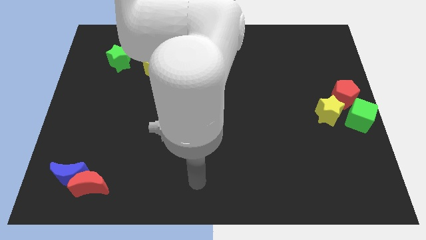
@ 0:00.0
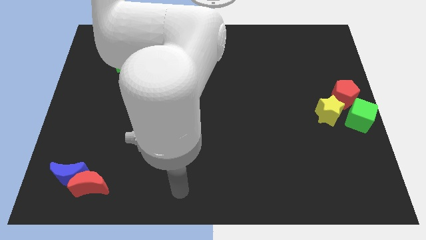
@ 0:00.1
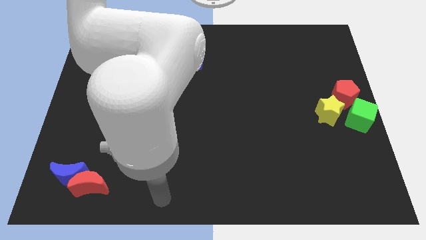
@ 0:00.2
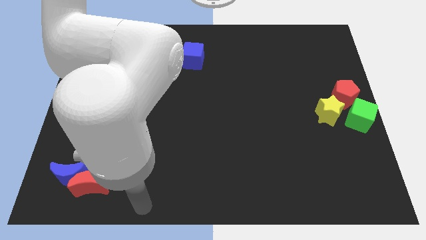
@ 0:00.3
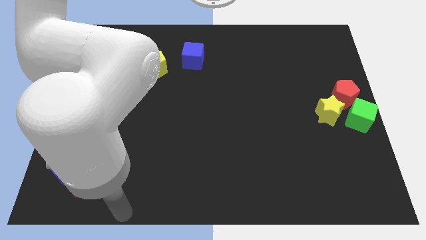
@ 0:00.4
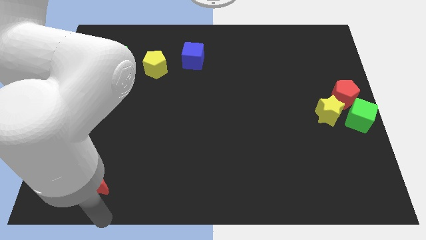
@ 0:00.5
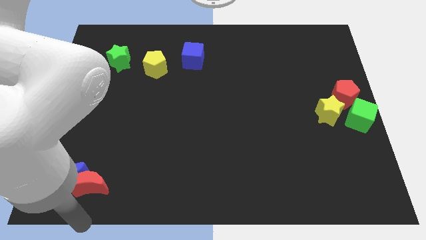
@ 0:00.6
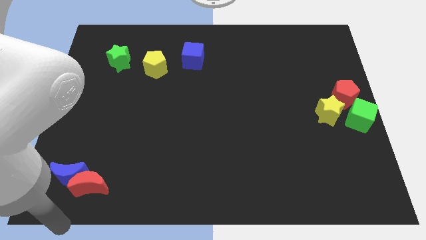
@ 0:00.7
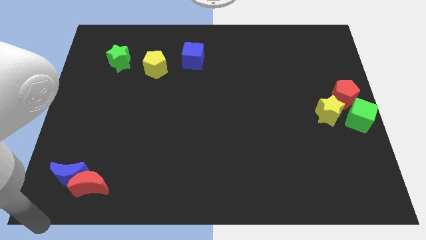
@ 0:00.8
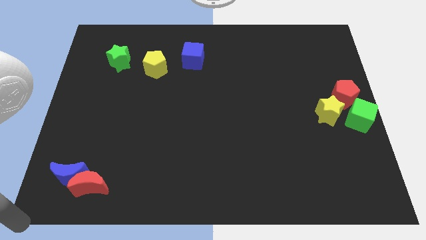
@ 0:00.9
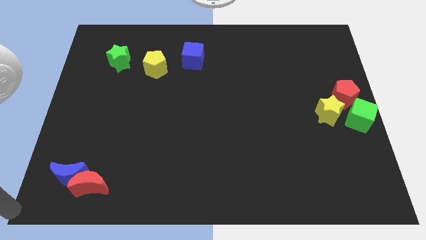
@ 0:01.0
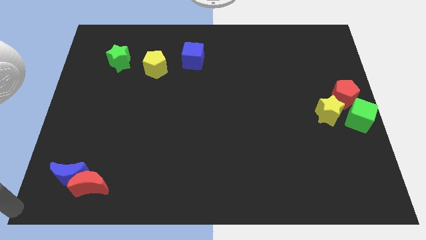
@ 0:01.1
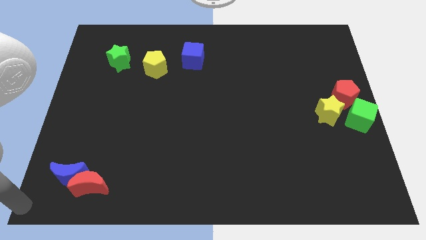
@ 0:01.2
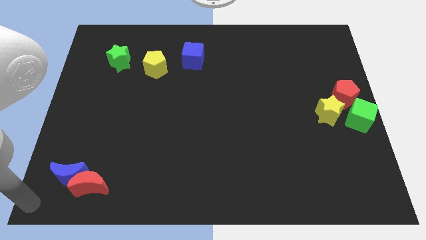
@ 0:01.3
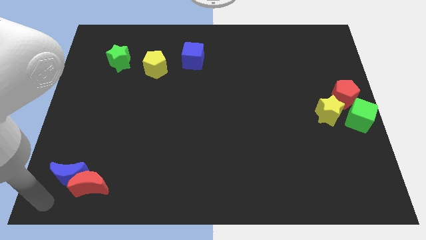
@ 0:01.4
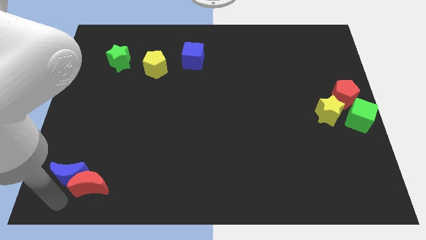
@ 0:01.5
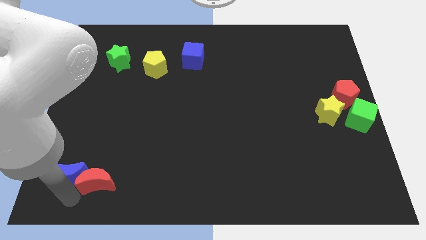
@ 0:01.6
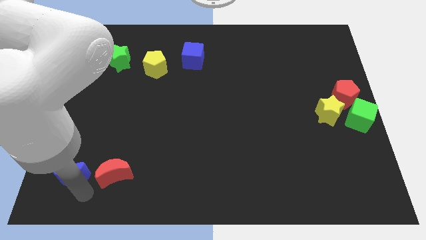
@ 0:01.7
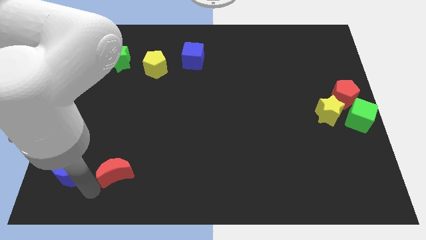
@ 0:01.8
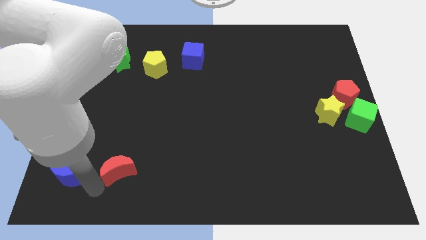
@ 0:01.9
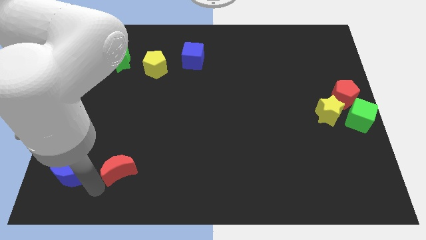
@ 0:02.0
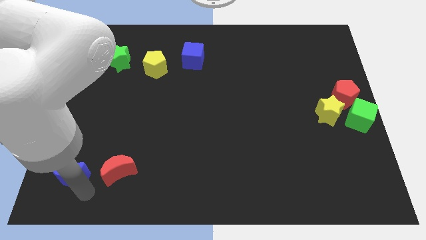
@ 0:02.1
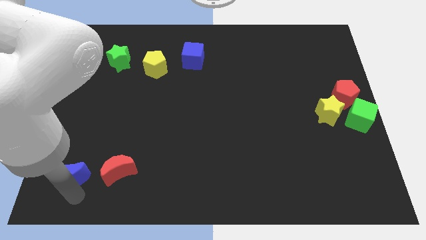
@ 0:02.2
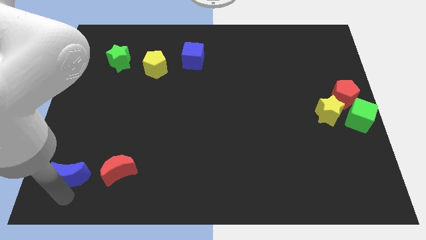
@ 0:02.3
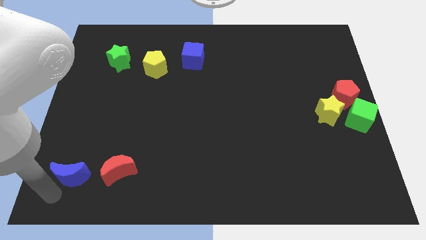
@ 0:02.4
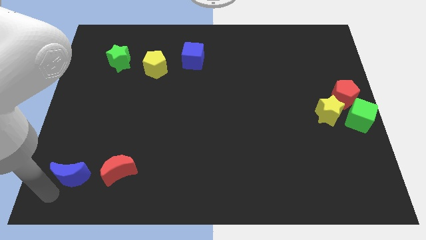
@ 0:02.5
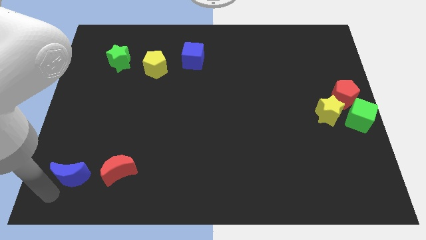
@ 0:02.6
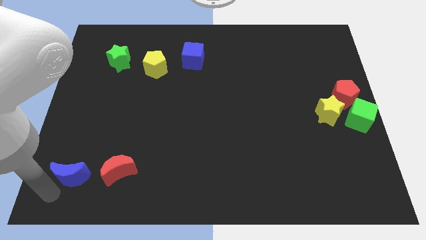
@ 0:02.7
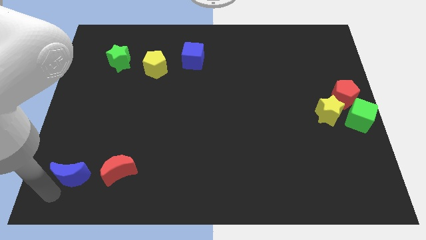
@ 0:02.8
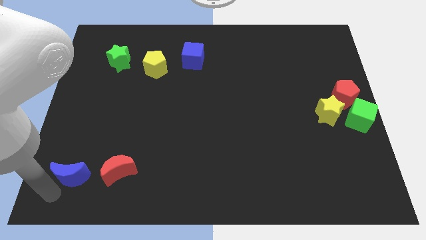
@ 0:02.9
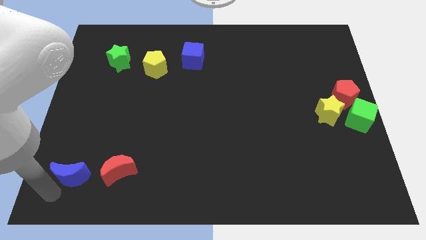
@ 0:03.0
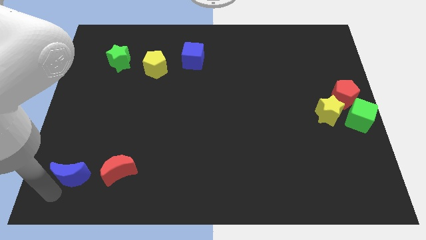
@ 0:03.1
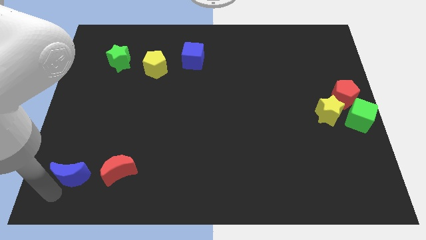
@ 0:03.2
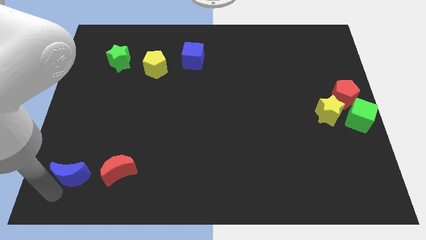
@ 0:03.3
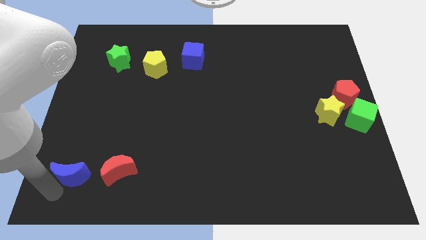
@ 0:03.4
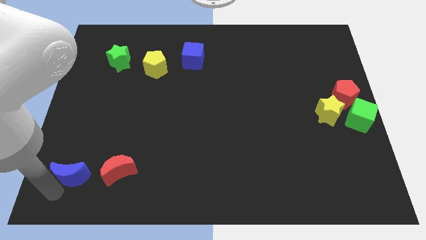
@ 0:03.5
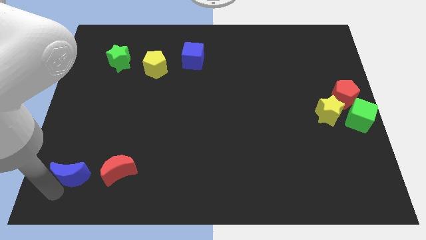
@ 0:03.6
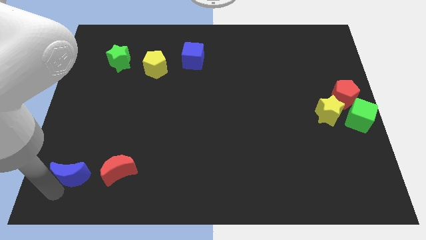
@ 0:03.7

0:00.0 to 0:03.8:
slightly move the red crescent to the center of the board

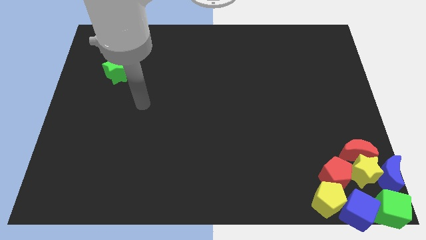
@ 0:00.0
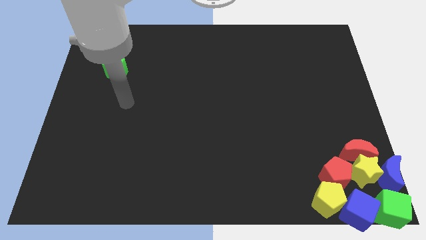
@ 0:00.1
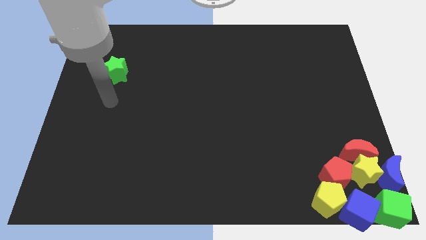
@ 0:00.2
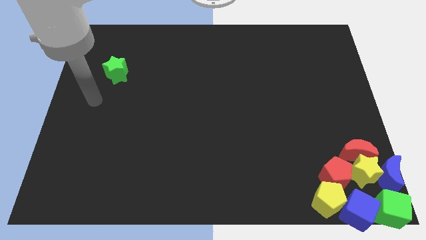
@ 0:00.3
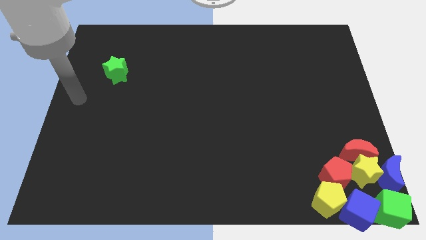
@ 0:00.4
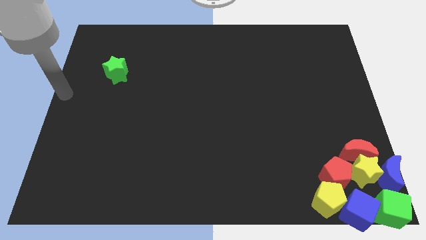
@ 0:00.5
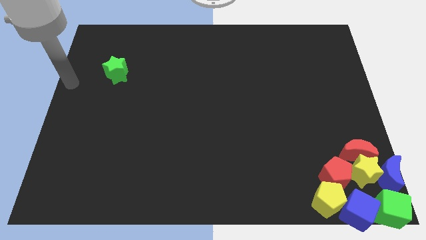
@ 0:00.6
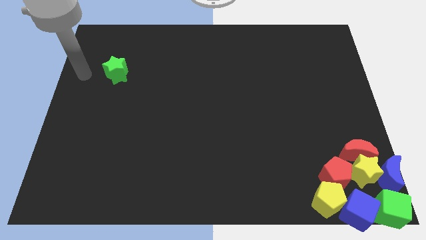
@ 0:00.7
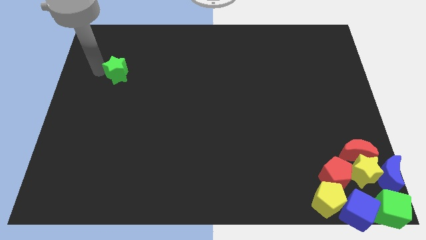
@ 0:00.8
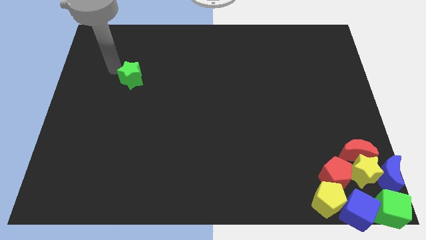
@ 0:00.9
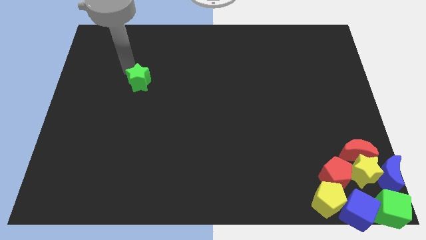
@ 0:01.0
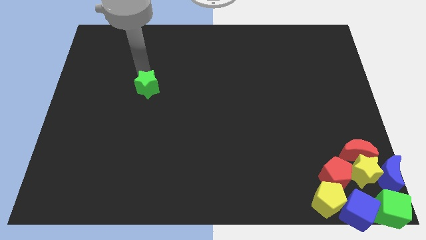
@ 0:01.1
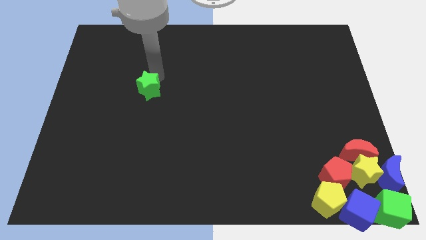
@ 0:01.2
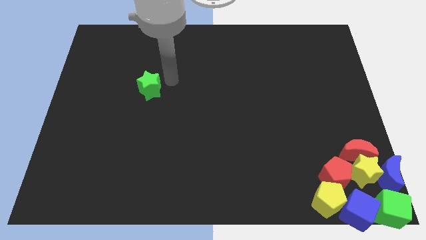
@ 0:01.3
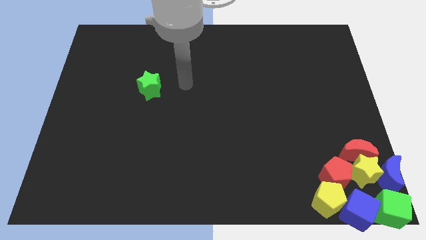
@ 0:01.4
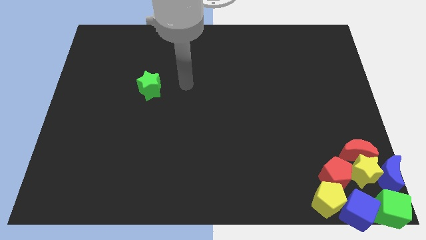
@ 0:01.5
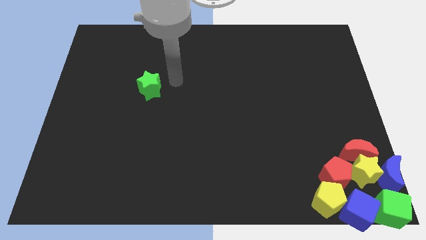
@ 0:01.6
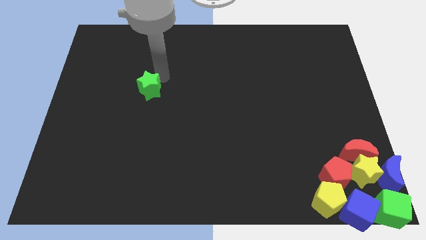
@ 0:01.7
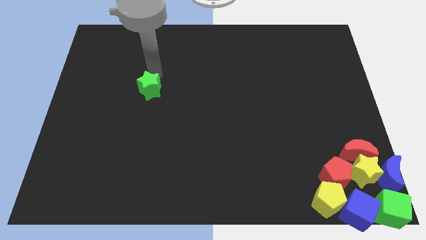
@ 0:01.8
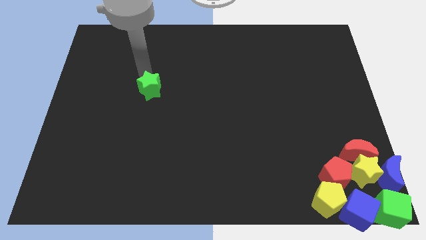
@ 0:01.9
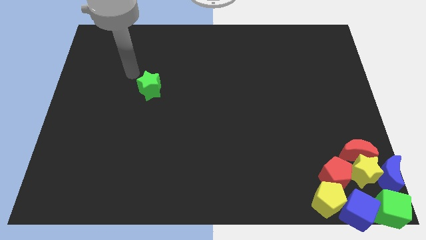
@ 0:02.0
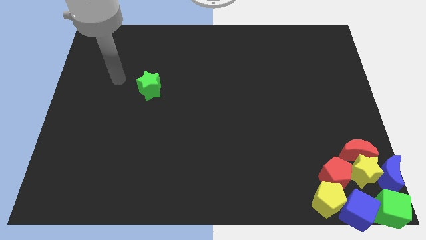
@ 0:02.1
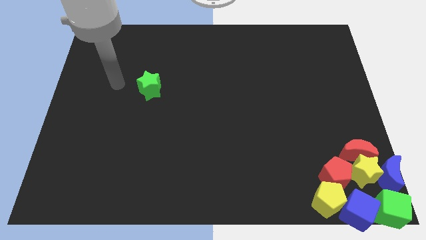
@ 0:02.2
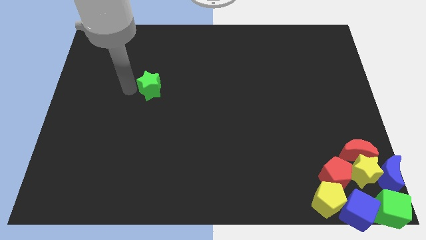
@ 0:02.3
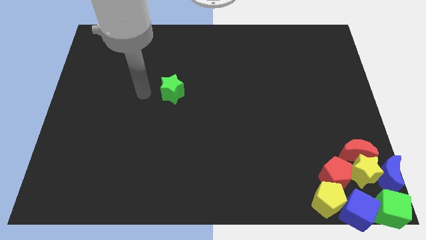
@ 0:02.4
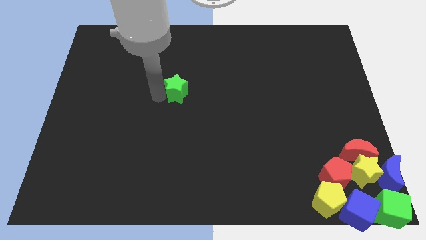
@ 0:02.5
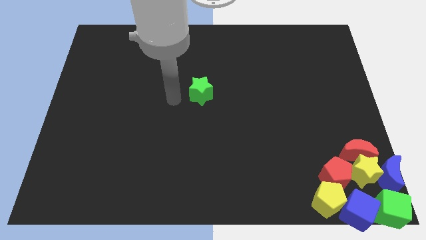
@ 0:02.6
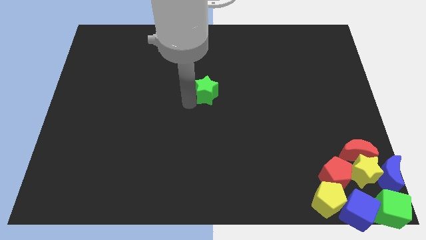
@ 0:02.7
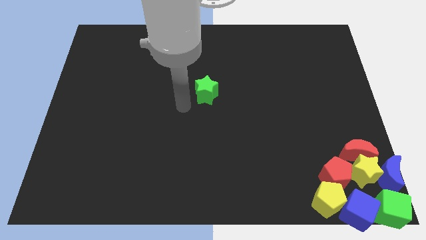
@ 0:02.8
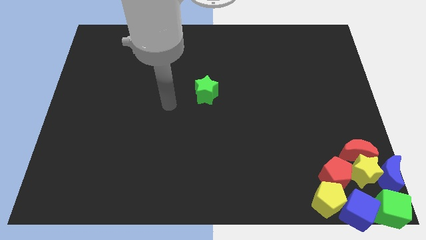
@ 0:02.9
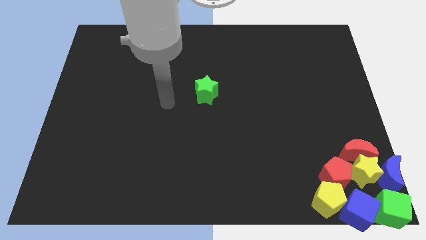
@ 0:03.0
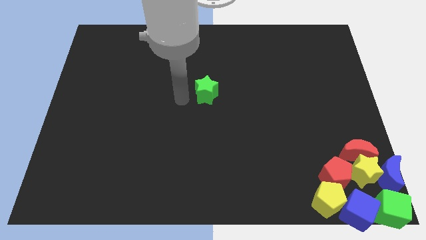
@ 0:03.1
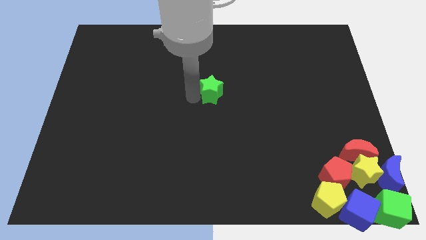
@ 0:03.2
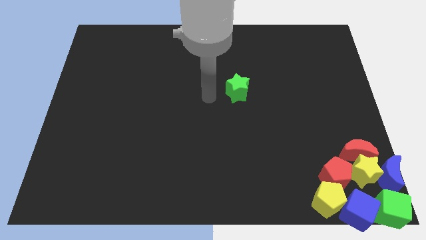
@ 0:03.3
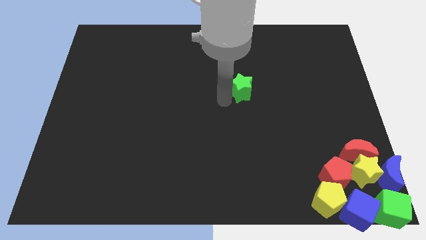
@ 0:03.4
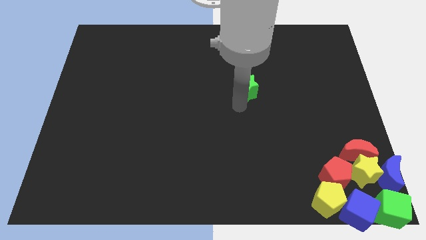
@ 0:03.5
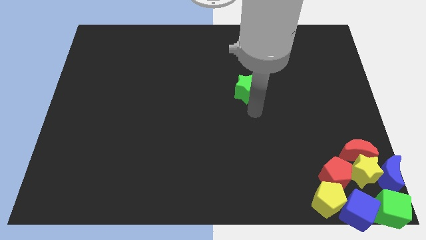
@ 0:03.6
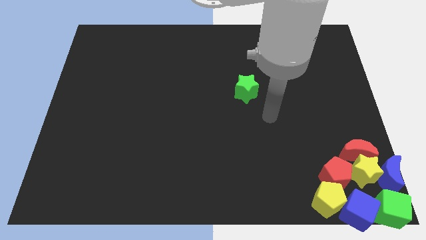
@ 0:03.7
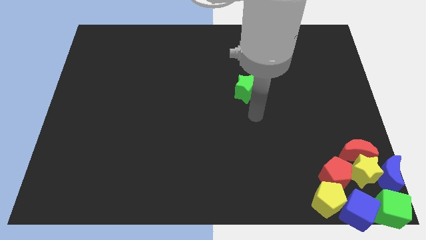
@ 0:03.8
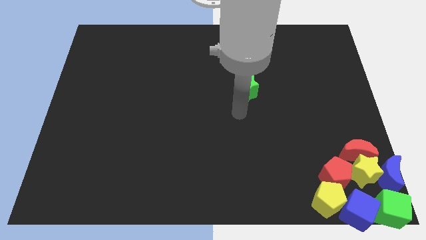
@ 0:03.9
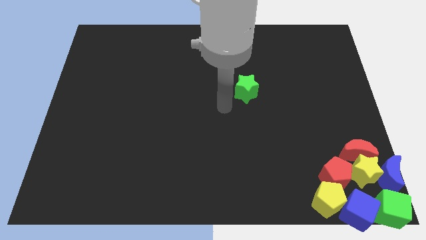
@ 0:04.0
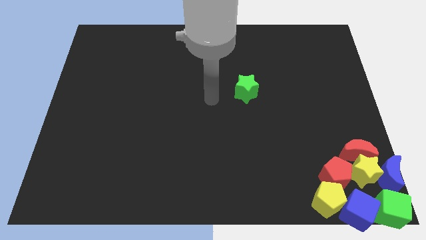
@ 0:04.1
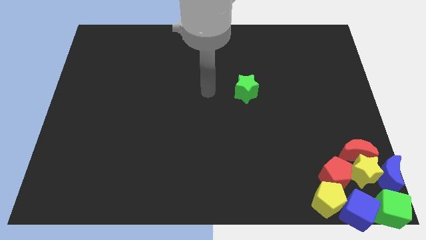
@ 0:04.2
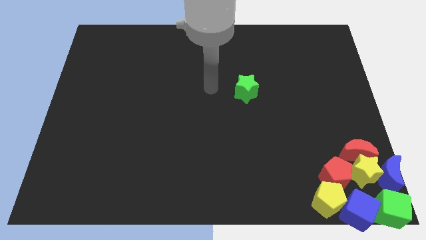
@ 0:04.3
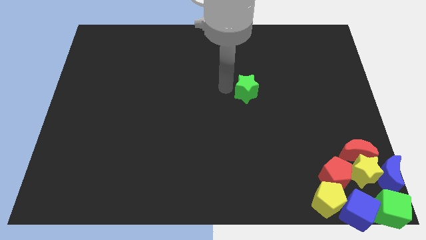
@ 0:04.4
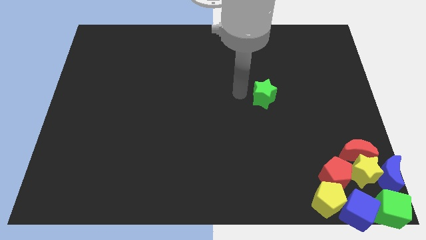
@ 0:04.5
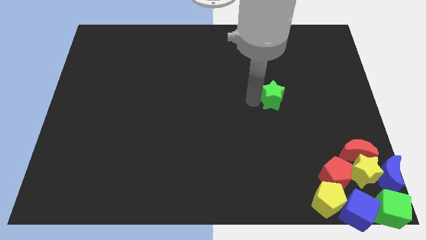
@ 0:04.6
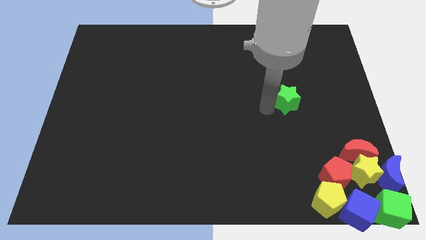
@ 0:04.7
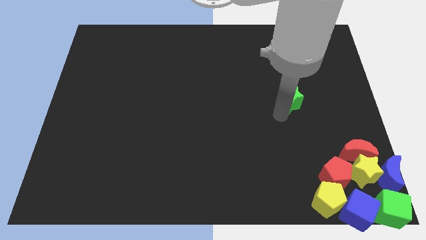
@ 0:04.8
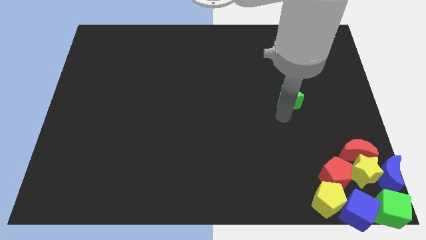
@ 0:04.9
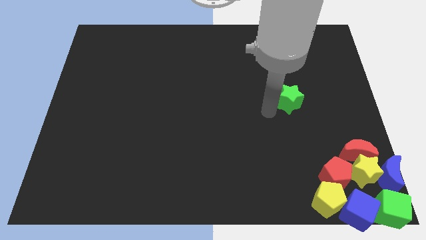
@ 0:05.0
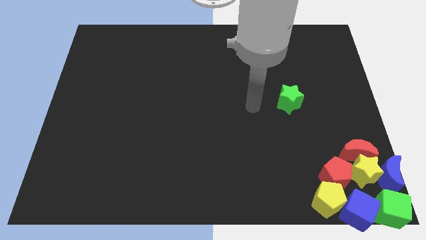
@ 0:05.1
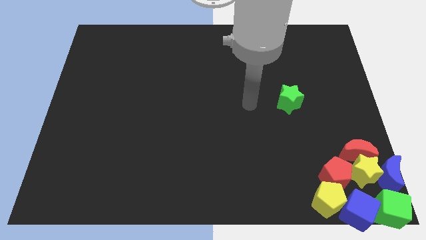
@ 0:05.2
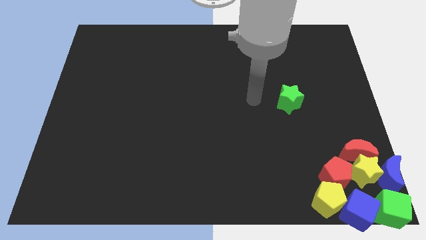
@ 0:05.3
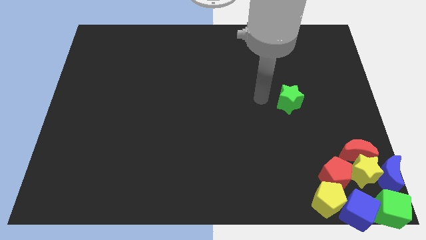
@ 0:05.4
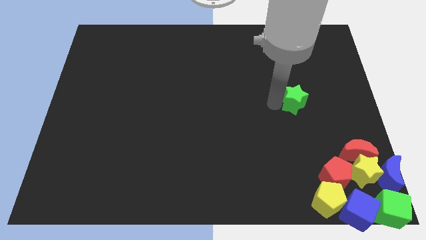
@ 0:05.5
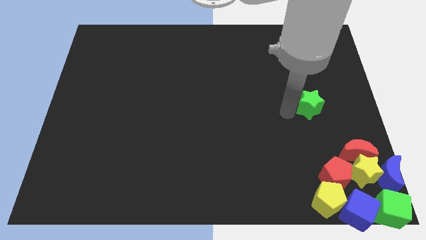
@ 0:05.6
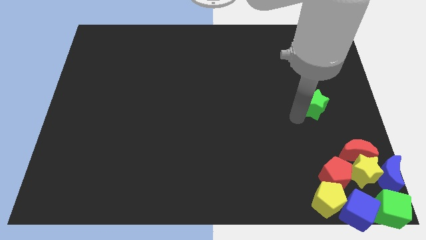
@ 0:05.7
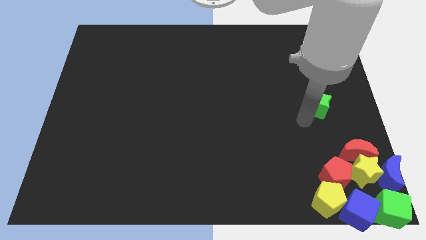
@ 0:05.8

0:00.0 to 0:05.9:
place the green star above the group of blocks
